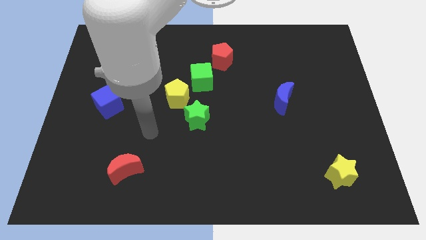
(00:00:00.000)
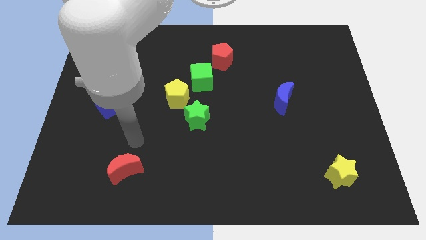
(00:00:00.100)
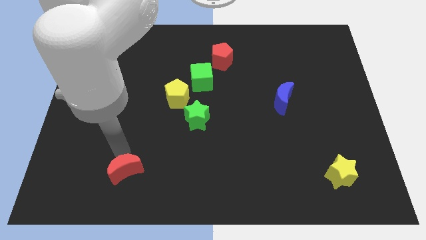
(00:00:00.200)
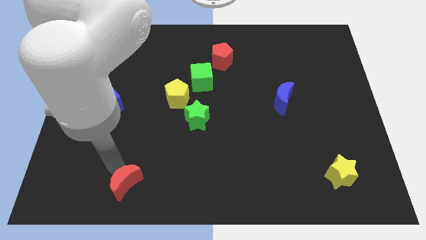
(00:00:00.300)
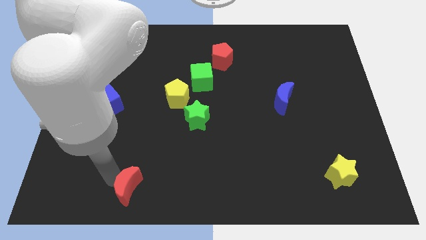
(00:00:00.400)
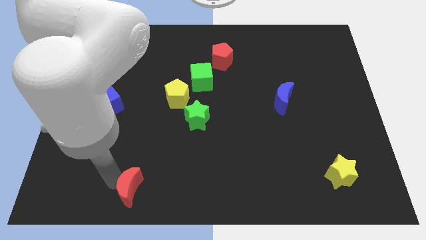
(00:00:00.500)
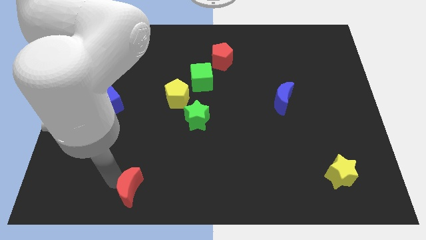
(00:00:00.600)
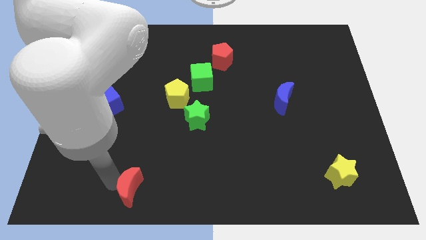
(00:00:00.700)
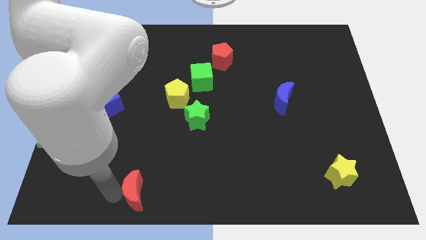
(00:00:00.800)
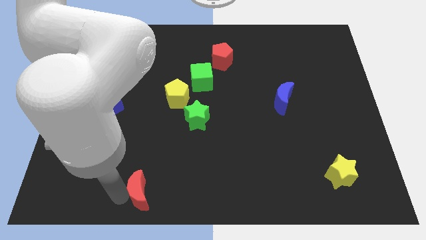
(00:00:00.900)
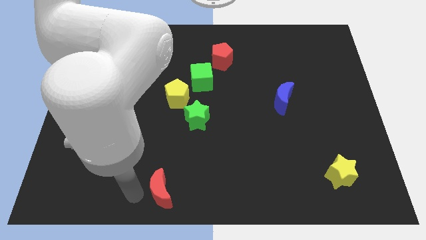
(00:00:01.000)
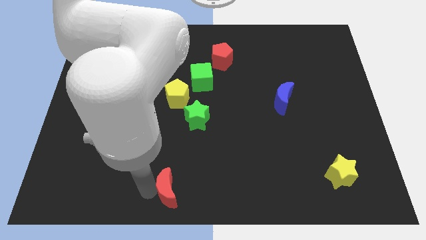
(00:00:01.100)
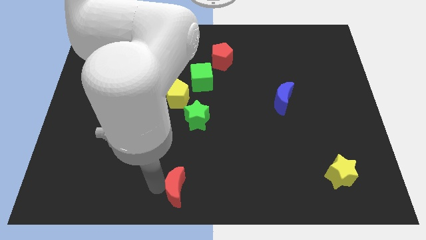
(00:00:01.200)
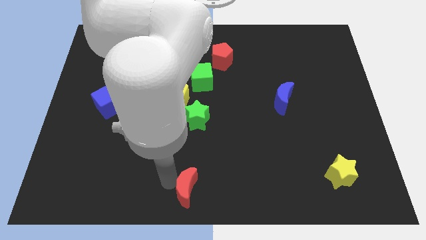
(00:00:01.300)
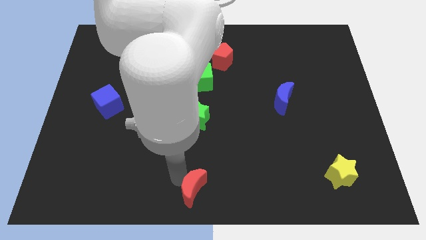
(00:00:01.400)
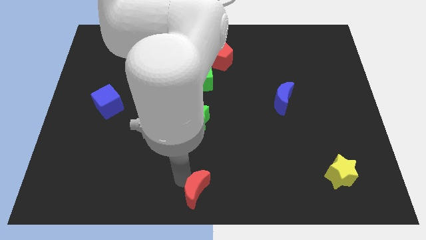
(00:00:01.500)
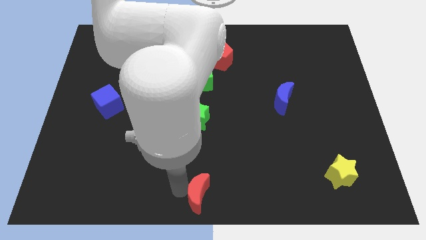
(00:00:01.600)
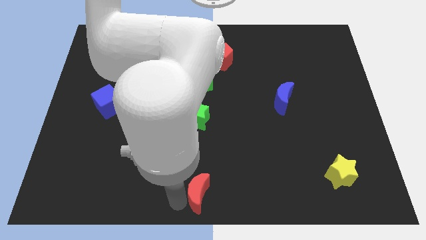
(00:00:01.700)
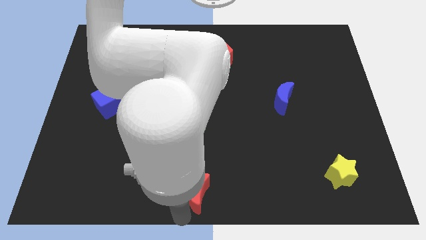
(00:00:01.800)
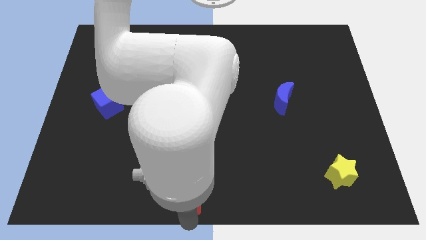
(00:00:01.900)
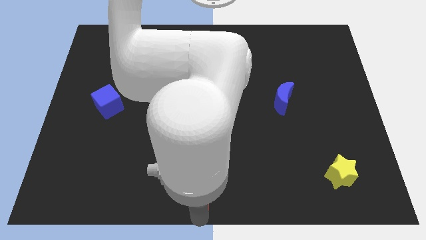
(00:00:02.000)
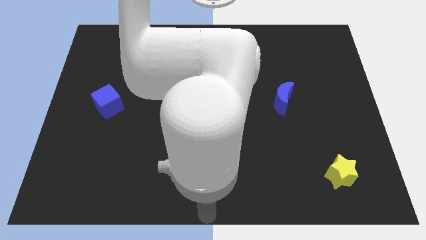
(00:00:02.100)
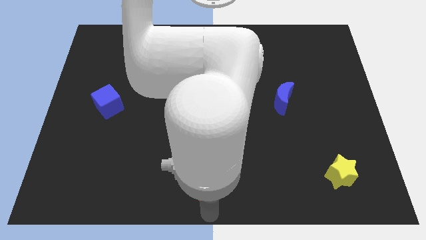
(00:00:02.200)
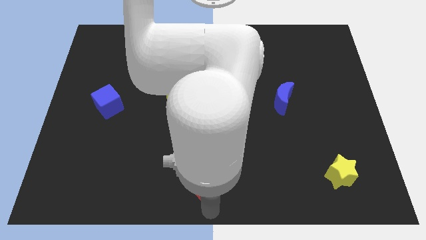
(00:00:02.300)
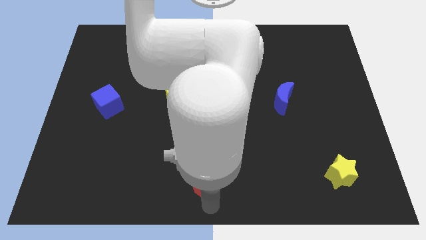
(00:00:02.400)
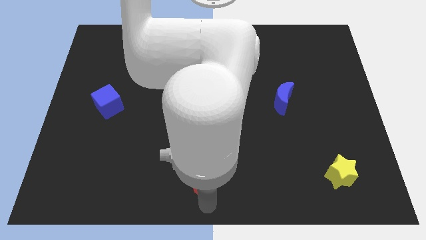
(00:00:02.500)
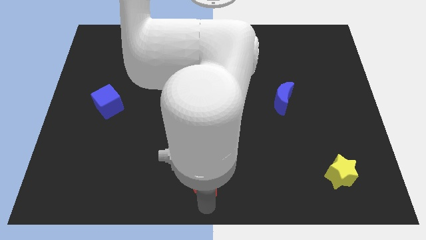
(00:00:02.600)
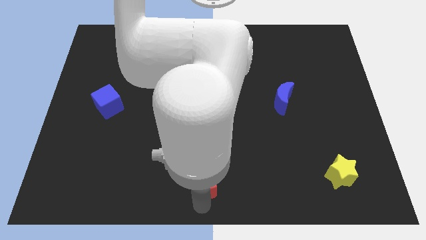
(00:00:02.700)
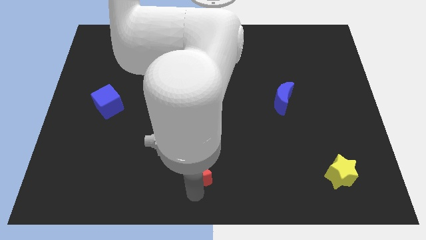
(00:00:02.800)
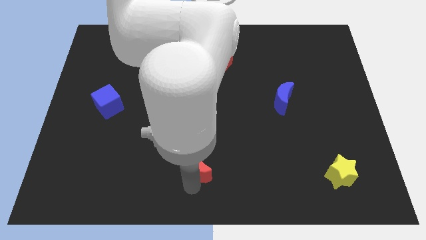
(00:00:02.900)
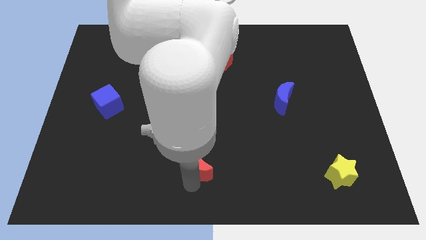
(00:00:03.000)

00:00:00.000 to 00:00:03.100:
drag red moon below the green star

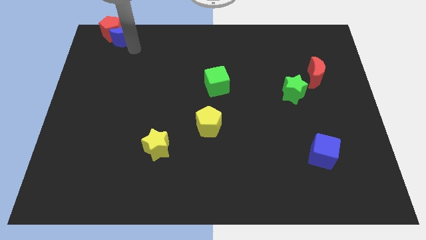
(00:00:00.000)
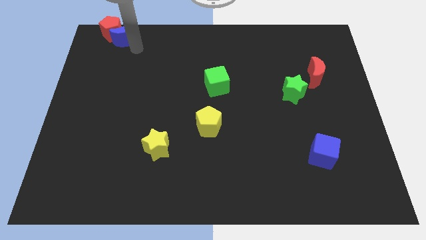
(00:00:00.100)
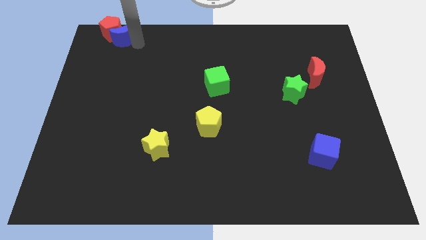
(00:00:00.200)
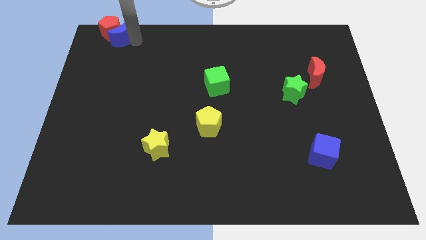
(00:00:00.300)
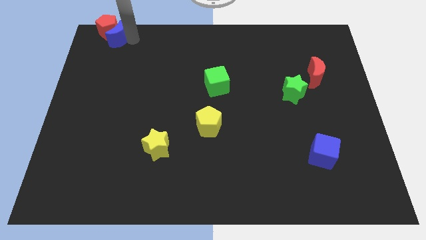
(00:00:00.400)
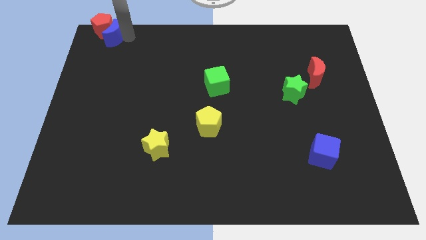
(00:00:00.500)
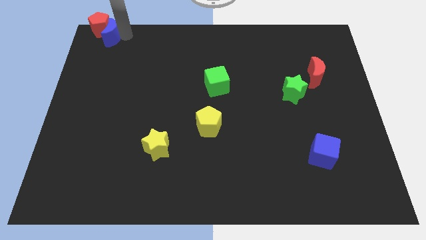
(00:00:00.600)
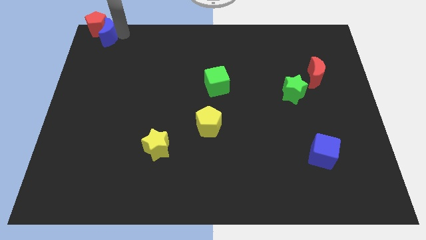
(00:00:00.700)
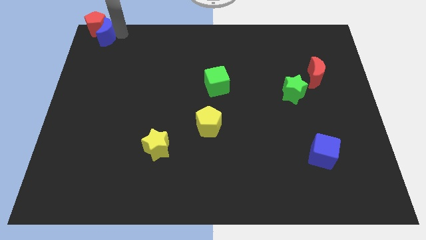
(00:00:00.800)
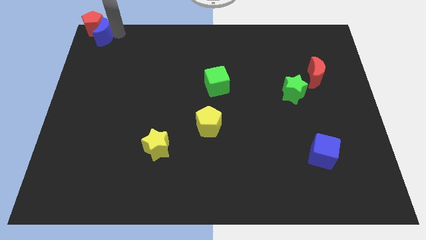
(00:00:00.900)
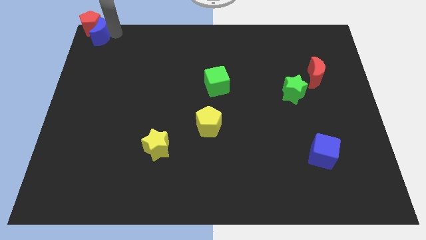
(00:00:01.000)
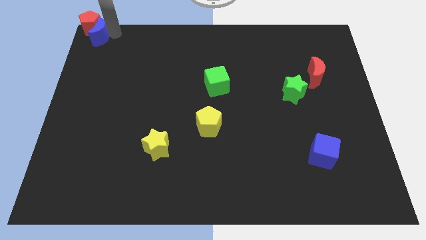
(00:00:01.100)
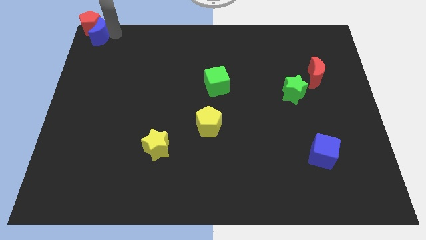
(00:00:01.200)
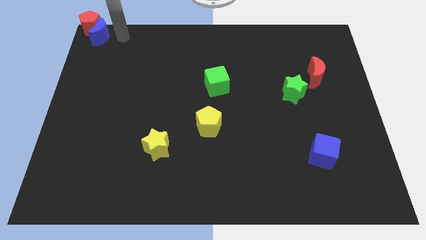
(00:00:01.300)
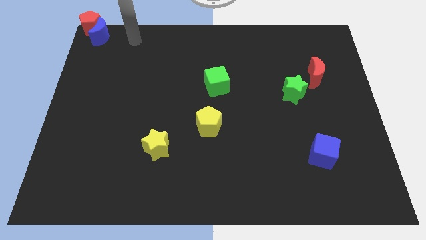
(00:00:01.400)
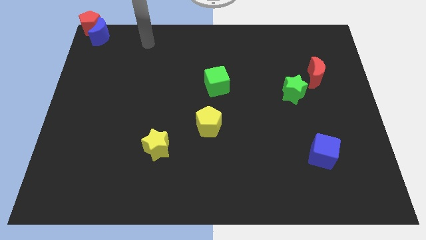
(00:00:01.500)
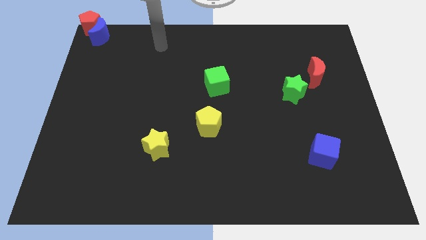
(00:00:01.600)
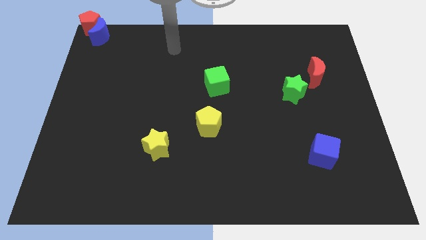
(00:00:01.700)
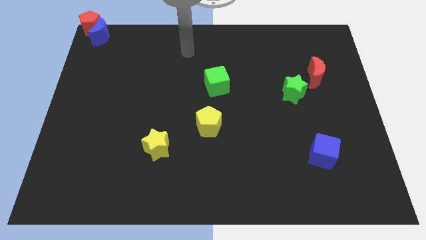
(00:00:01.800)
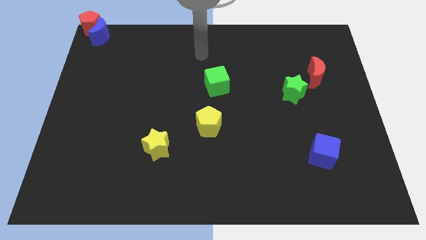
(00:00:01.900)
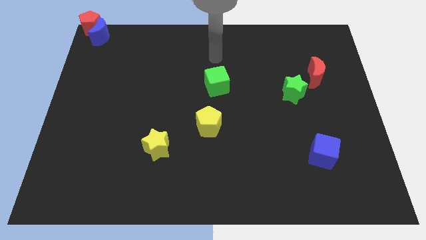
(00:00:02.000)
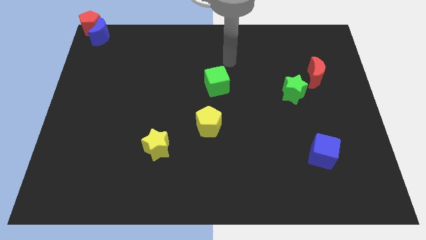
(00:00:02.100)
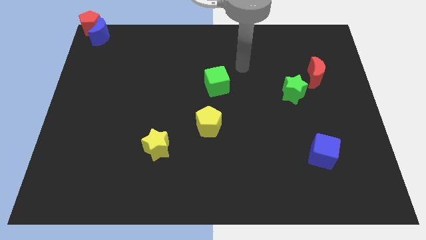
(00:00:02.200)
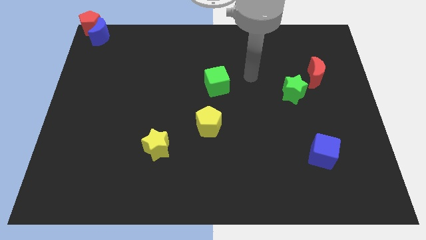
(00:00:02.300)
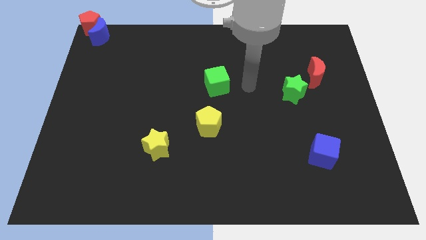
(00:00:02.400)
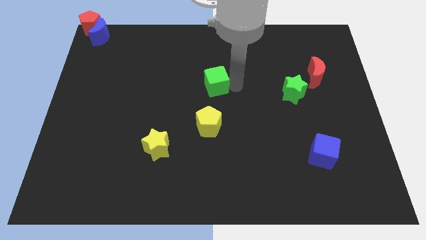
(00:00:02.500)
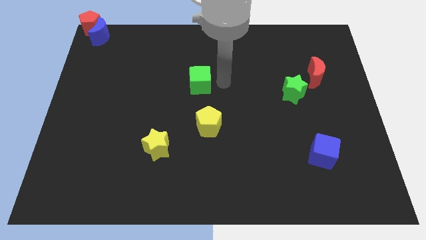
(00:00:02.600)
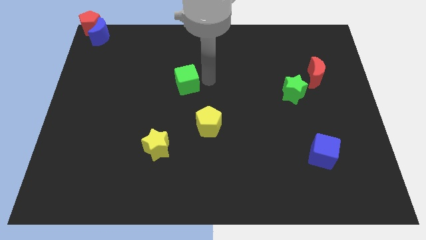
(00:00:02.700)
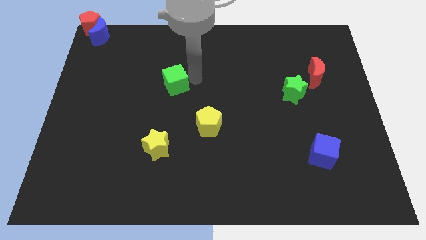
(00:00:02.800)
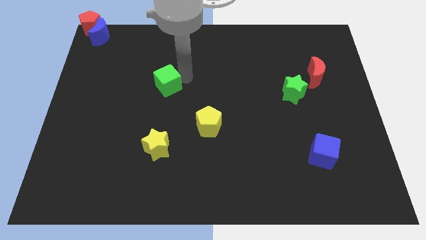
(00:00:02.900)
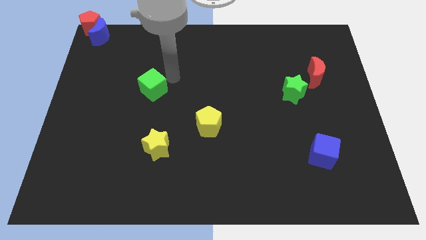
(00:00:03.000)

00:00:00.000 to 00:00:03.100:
slide green cube towards left center

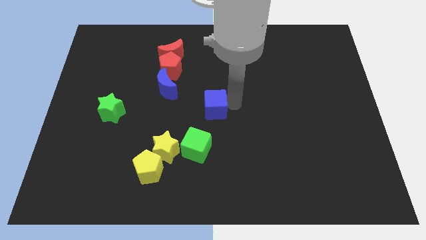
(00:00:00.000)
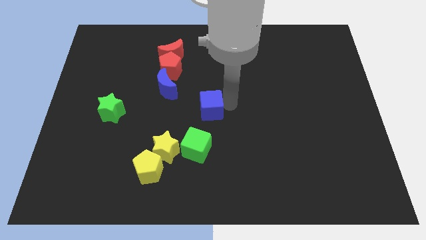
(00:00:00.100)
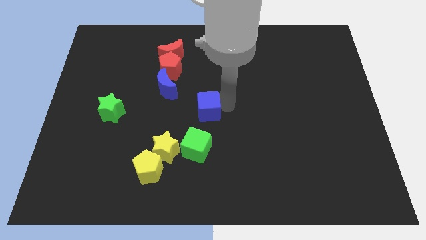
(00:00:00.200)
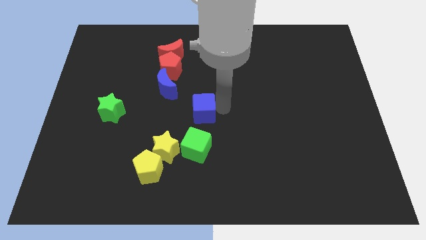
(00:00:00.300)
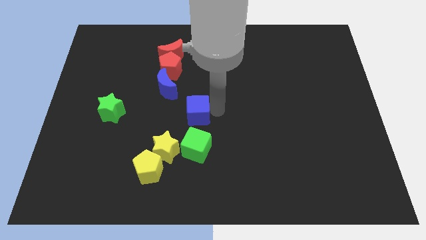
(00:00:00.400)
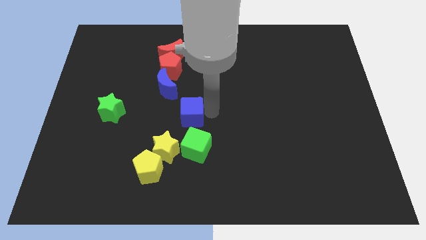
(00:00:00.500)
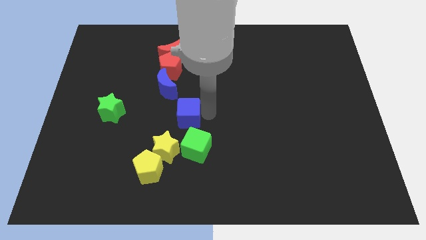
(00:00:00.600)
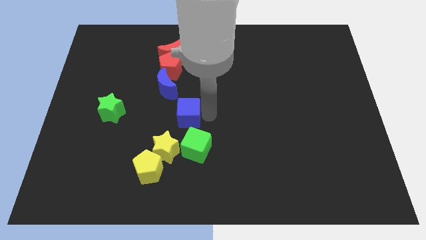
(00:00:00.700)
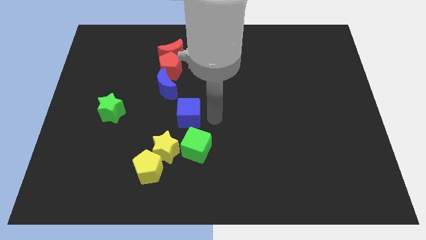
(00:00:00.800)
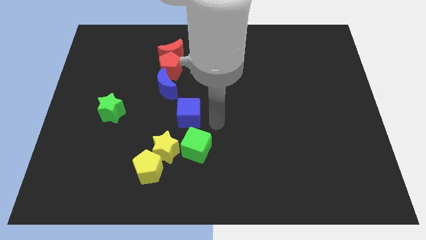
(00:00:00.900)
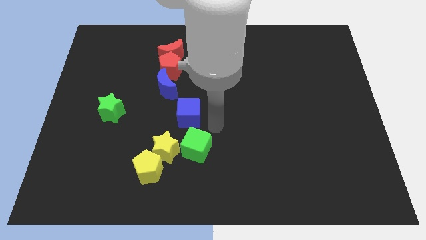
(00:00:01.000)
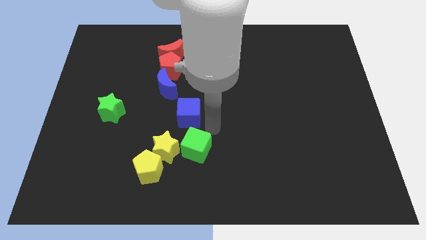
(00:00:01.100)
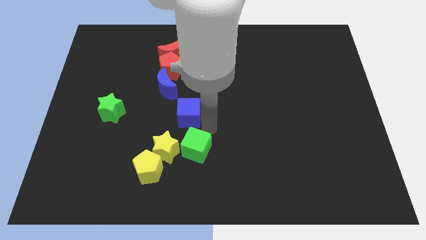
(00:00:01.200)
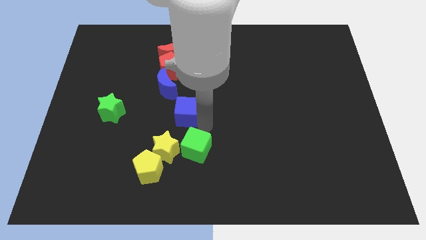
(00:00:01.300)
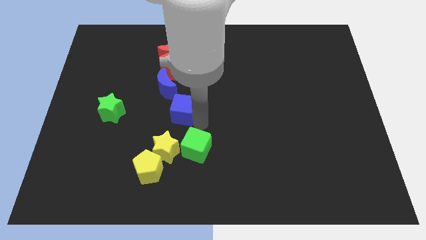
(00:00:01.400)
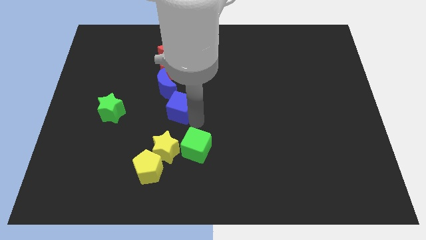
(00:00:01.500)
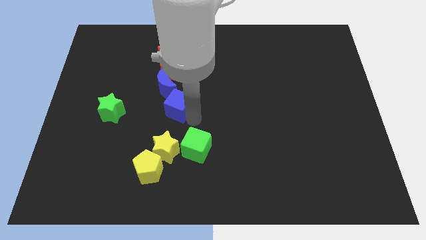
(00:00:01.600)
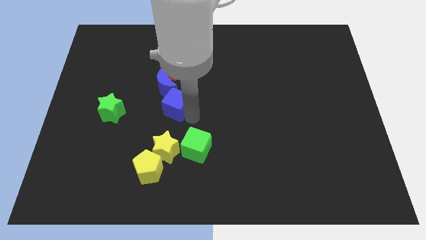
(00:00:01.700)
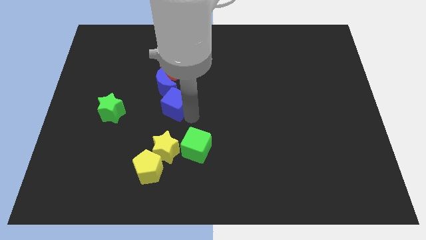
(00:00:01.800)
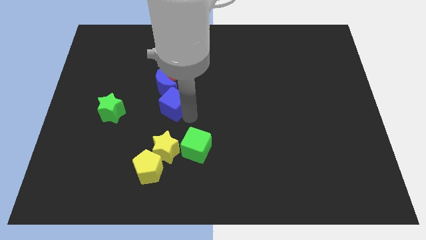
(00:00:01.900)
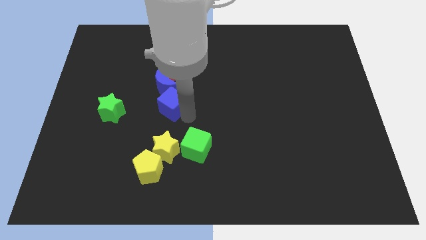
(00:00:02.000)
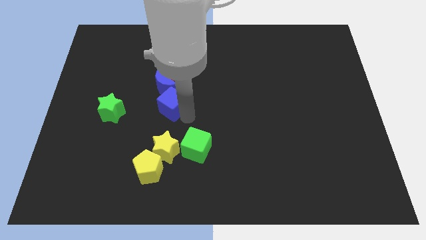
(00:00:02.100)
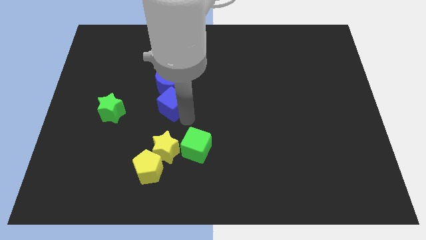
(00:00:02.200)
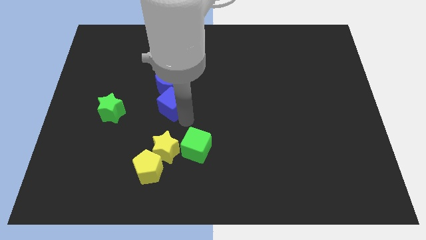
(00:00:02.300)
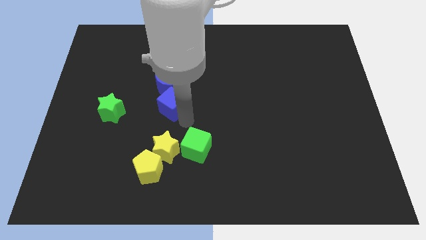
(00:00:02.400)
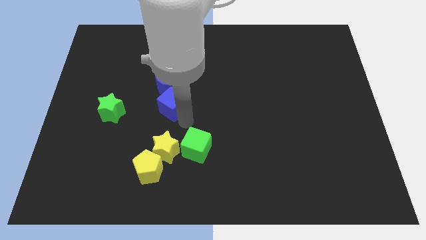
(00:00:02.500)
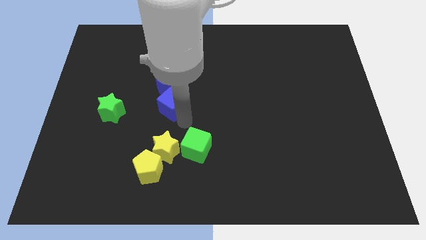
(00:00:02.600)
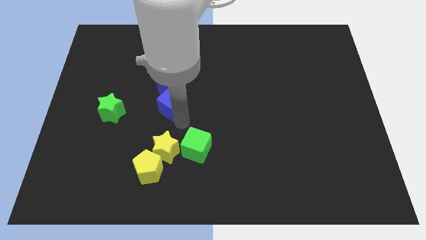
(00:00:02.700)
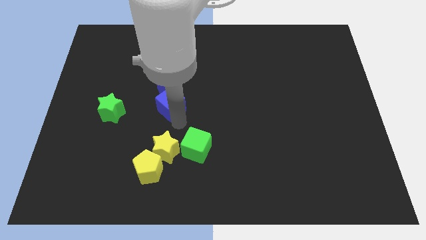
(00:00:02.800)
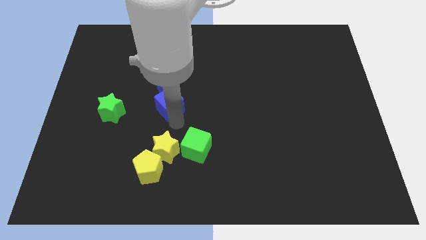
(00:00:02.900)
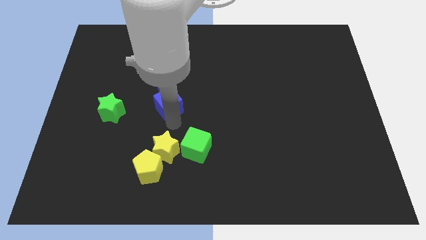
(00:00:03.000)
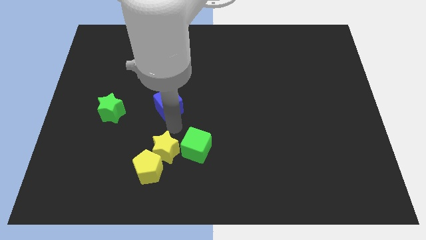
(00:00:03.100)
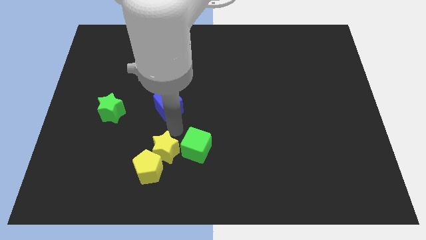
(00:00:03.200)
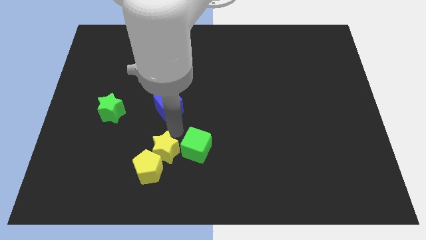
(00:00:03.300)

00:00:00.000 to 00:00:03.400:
put the blue cube to the bottom side of the blue crescent
